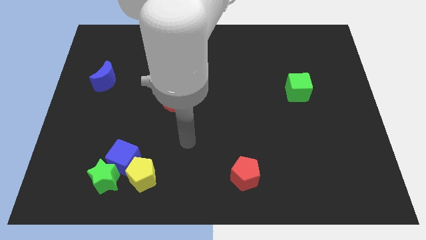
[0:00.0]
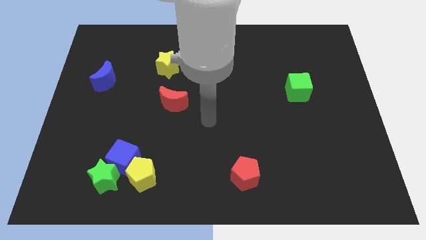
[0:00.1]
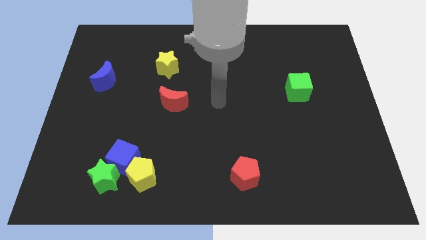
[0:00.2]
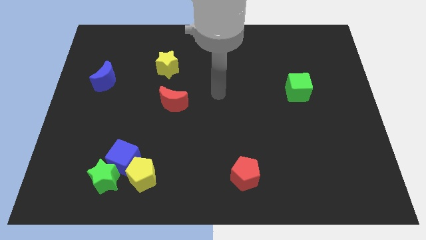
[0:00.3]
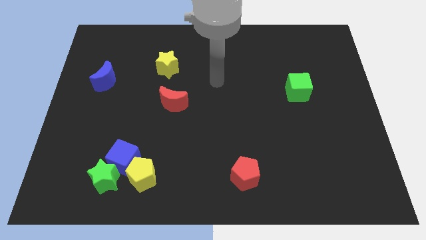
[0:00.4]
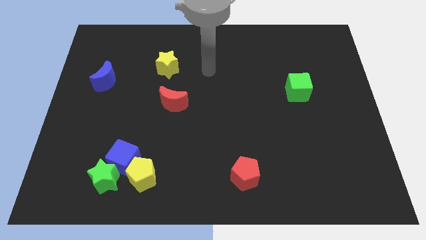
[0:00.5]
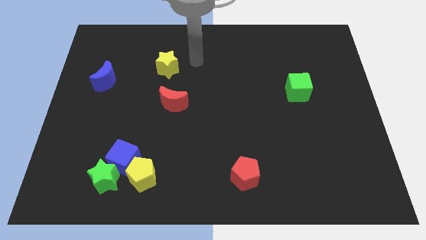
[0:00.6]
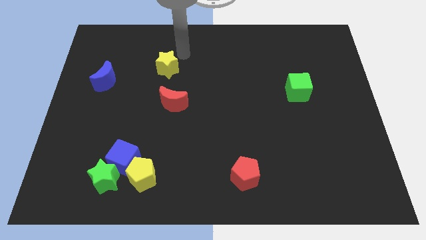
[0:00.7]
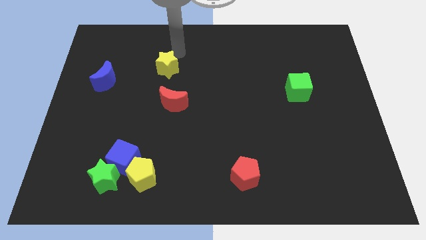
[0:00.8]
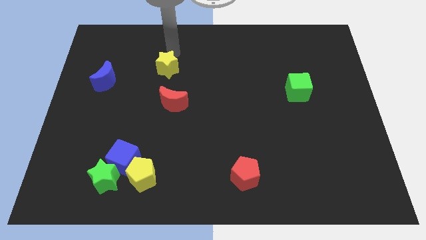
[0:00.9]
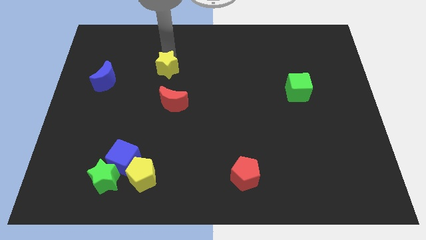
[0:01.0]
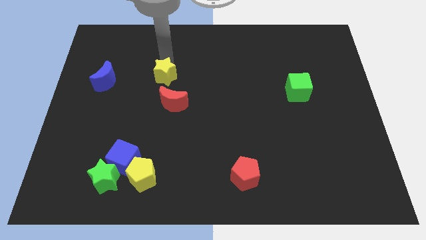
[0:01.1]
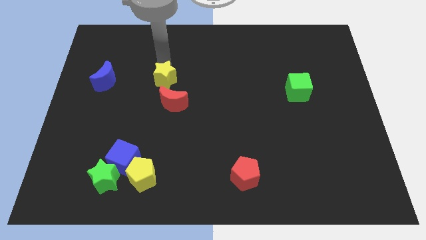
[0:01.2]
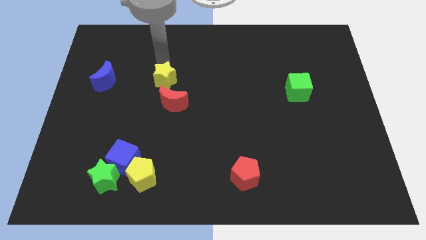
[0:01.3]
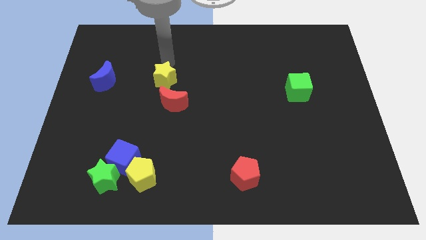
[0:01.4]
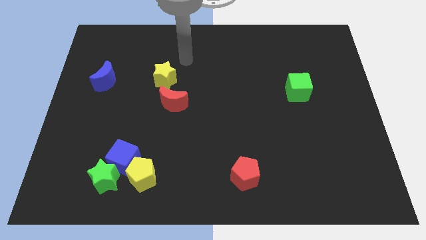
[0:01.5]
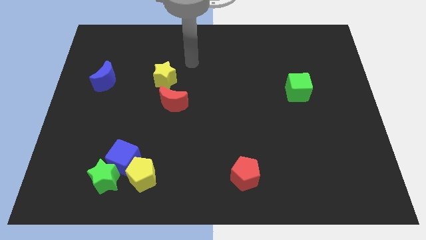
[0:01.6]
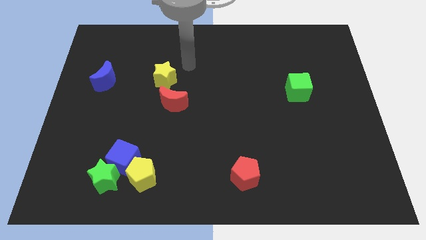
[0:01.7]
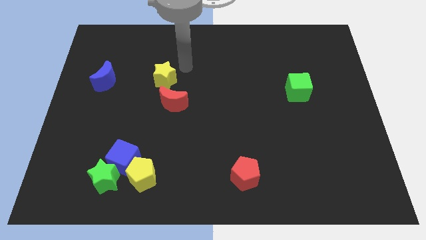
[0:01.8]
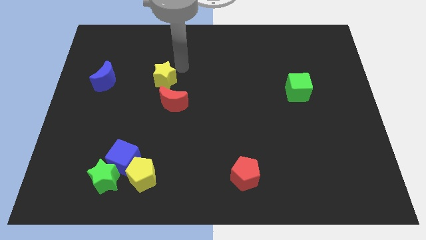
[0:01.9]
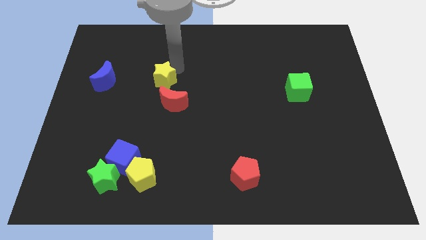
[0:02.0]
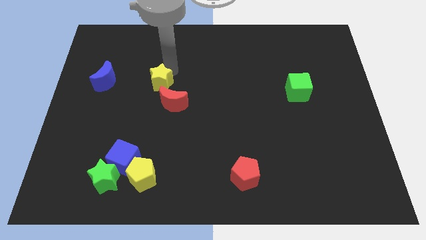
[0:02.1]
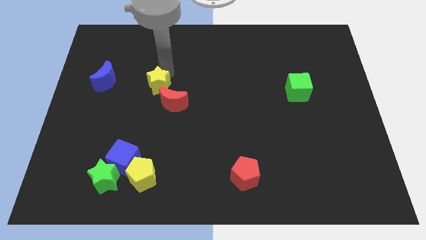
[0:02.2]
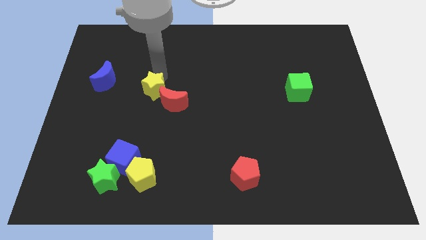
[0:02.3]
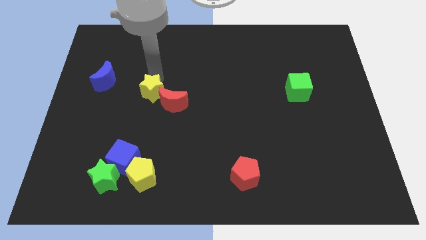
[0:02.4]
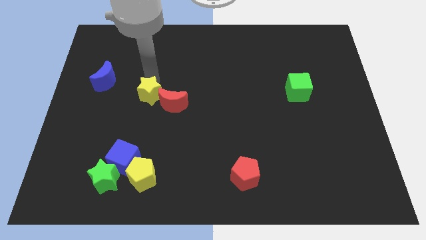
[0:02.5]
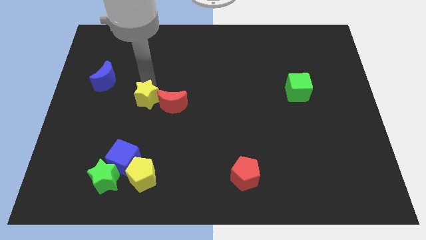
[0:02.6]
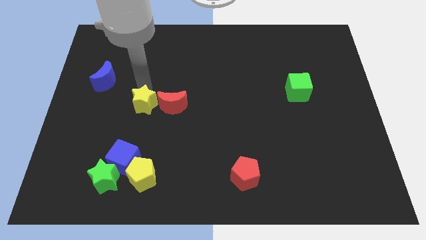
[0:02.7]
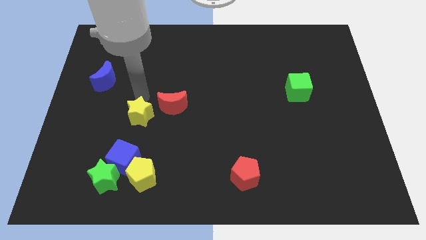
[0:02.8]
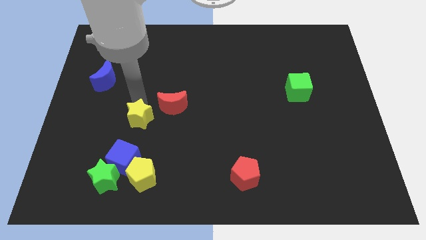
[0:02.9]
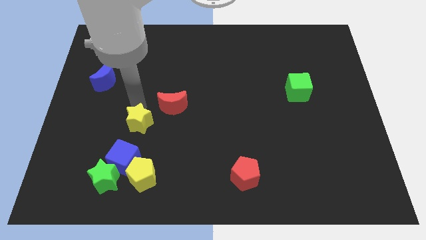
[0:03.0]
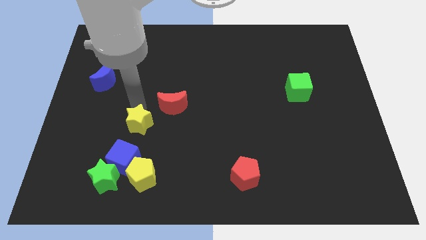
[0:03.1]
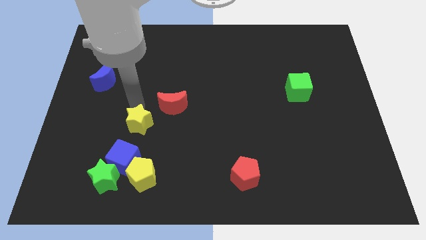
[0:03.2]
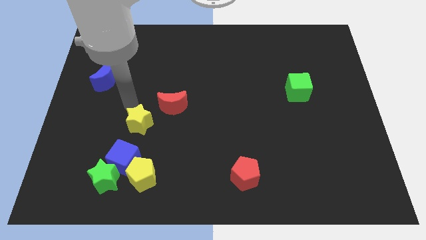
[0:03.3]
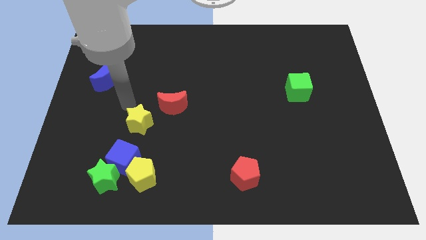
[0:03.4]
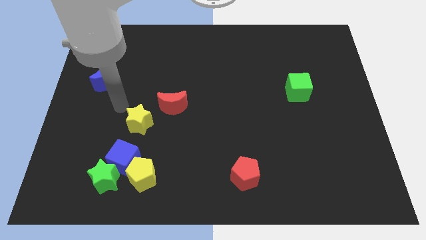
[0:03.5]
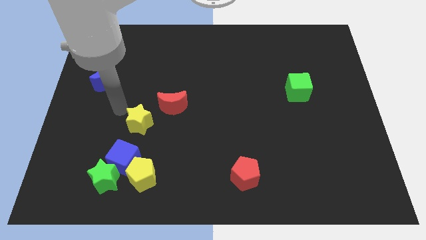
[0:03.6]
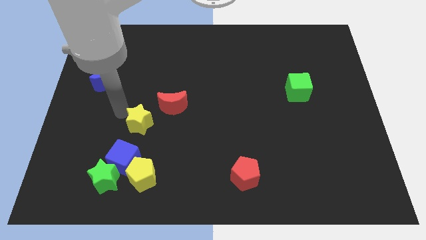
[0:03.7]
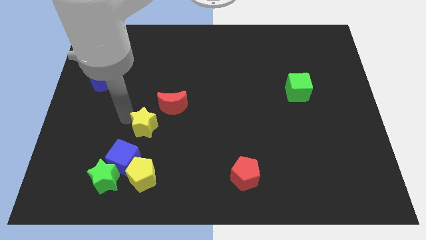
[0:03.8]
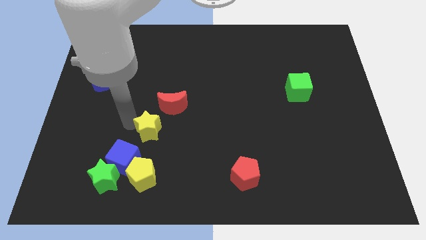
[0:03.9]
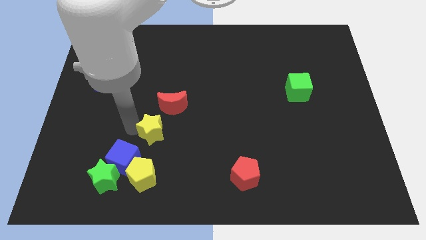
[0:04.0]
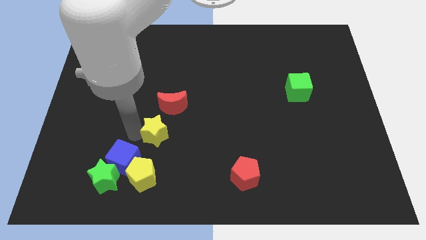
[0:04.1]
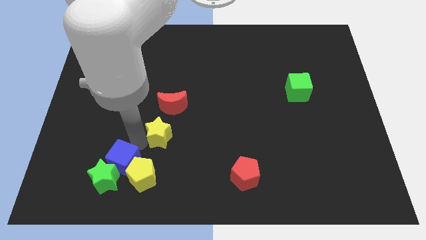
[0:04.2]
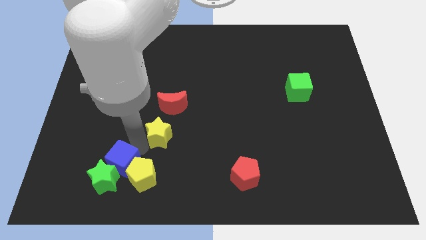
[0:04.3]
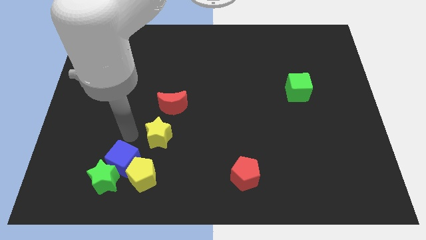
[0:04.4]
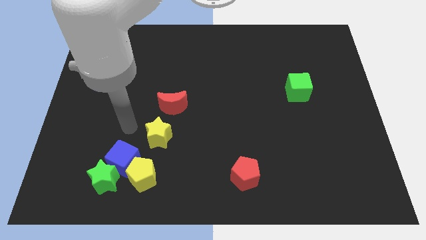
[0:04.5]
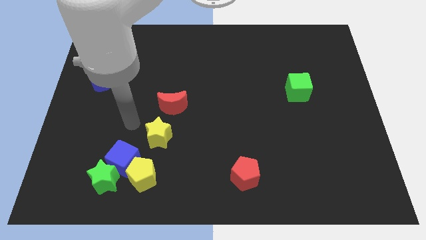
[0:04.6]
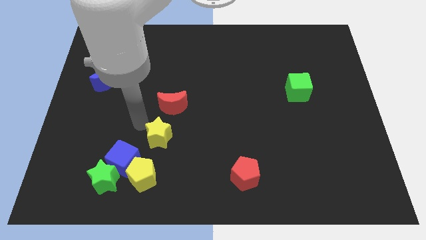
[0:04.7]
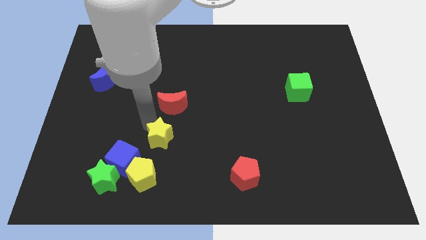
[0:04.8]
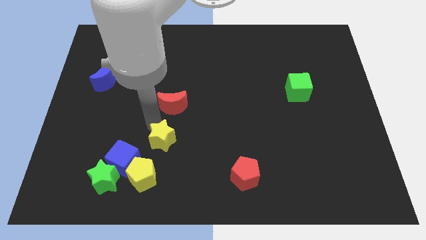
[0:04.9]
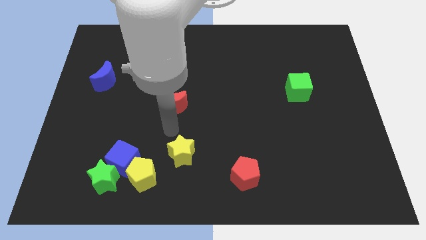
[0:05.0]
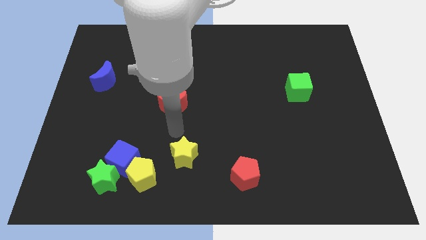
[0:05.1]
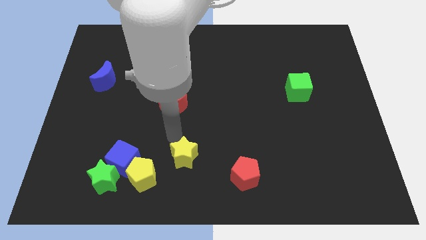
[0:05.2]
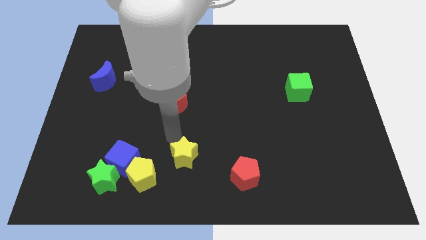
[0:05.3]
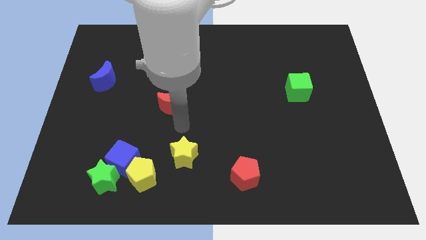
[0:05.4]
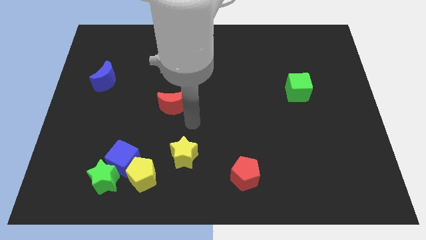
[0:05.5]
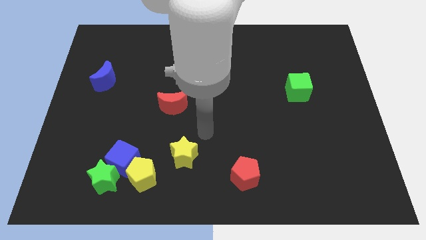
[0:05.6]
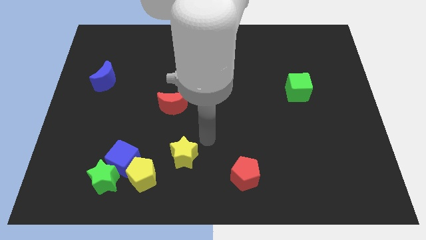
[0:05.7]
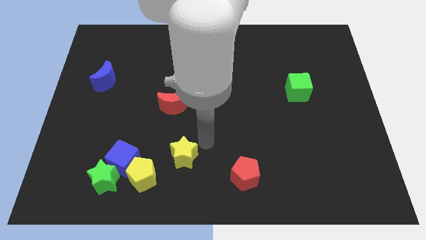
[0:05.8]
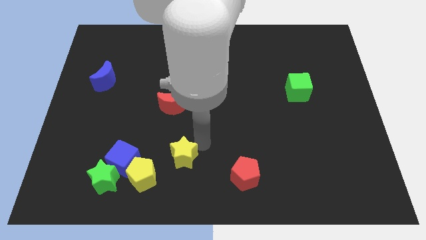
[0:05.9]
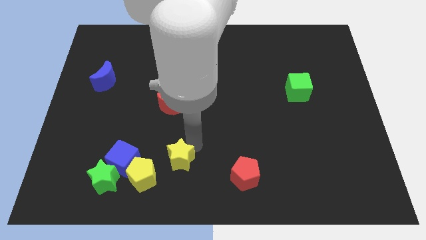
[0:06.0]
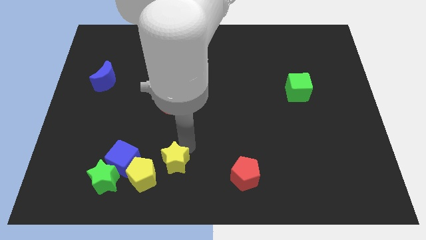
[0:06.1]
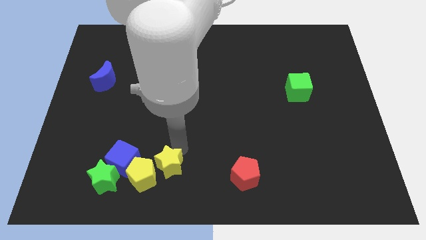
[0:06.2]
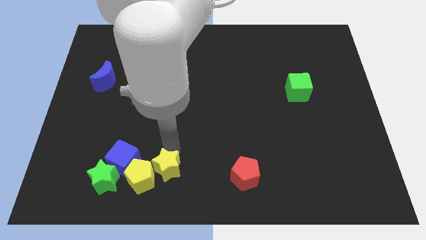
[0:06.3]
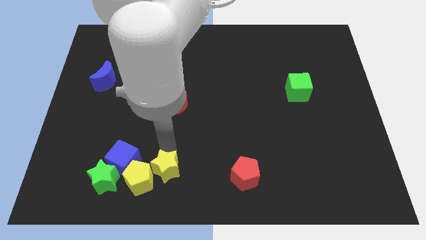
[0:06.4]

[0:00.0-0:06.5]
put the yellow star to the yellow pentagon

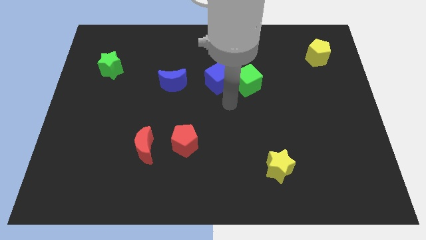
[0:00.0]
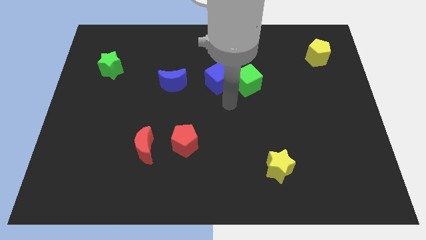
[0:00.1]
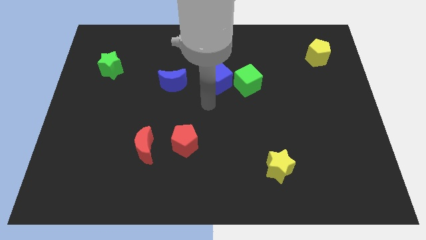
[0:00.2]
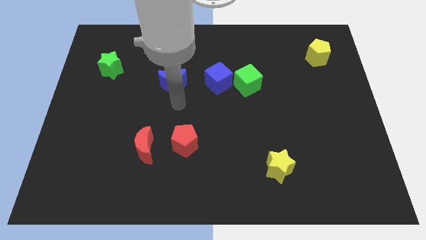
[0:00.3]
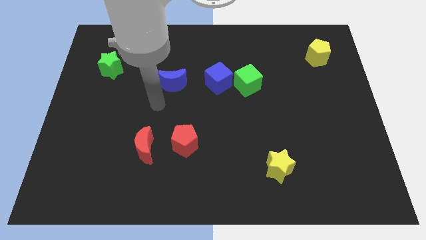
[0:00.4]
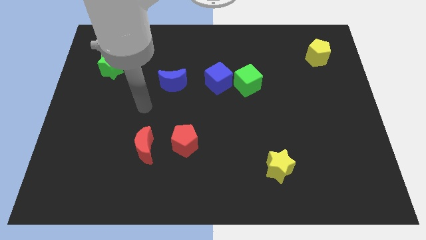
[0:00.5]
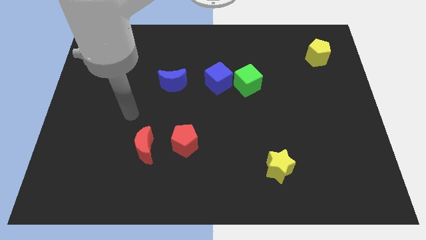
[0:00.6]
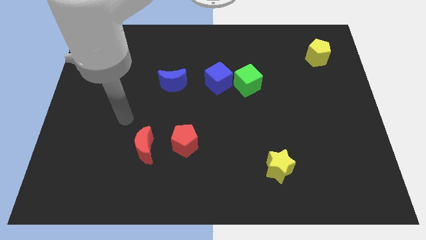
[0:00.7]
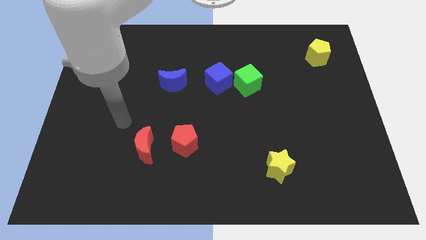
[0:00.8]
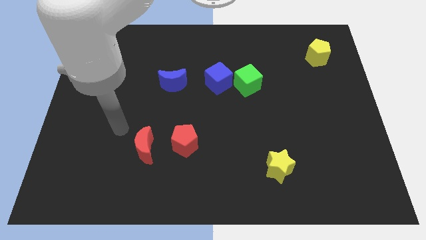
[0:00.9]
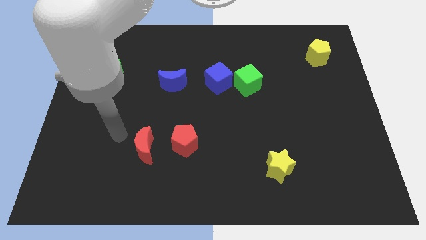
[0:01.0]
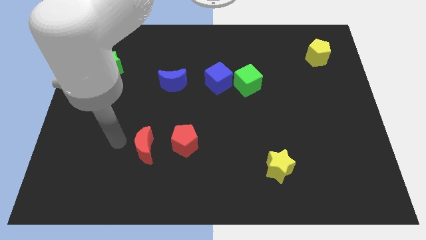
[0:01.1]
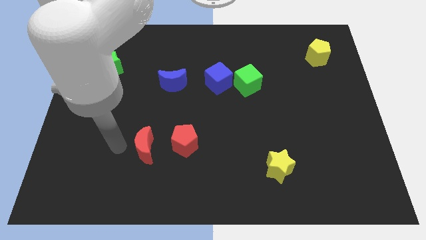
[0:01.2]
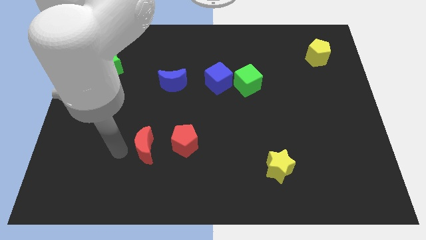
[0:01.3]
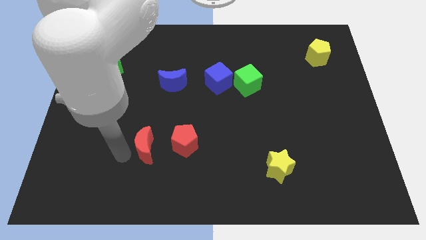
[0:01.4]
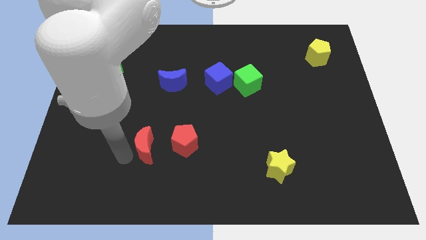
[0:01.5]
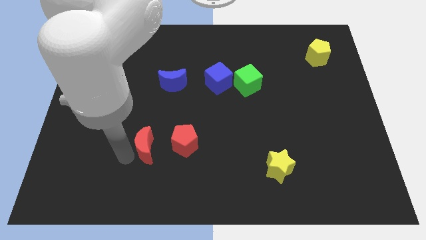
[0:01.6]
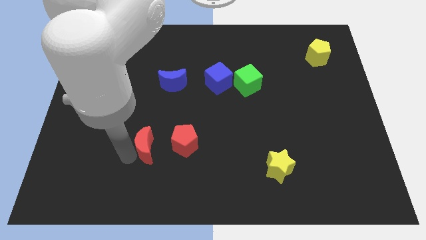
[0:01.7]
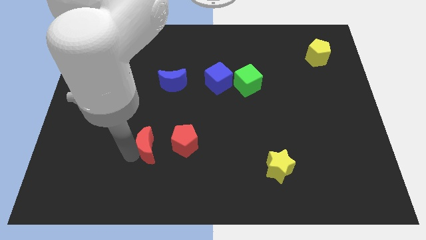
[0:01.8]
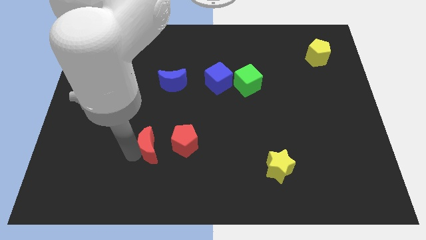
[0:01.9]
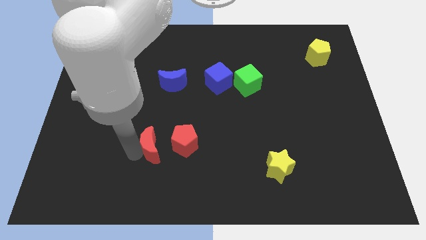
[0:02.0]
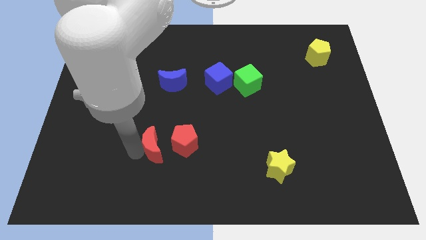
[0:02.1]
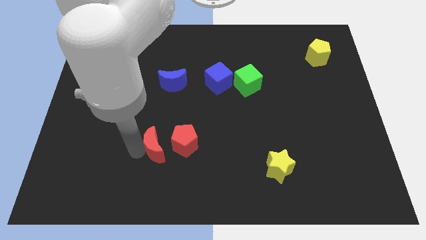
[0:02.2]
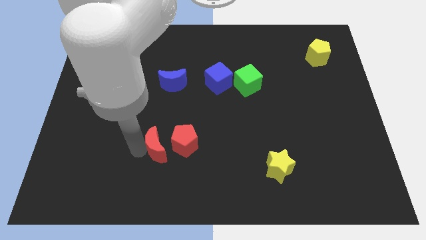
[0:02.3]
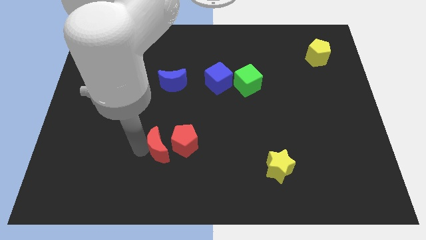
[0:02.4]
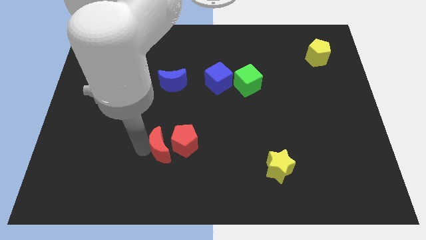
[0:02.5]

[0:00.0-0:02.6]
move the red moon close to the red pentagon
